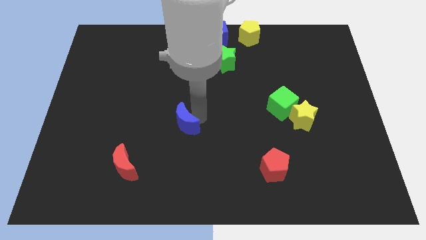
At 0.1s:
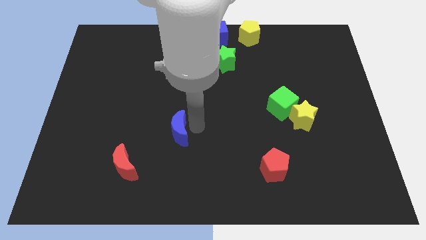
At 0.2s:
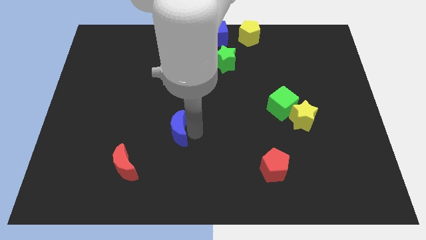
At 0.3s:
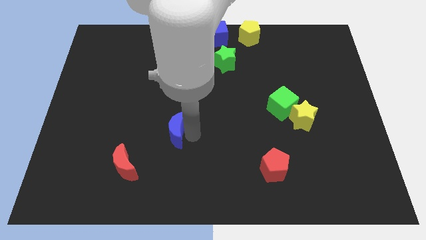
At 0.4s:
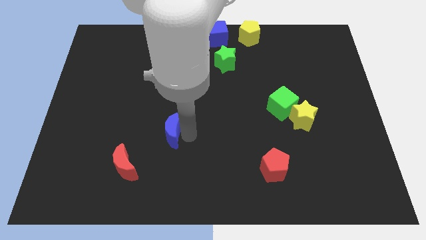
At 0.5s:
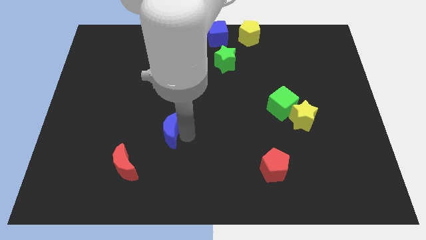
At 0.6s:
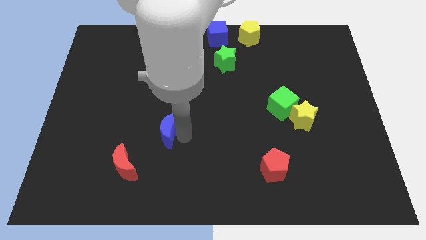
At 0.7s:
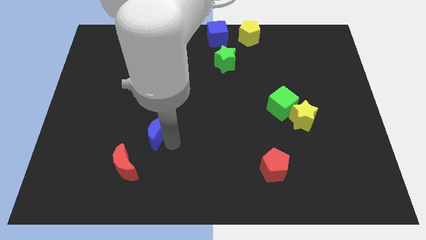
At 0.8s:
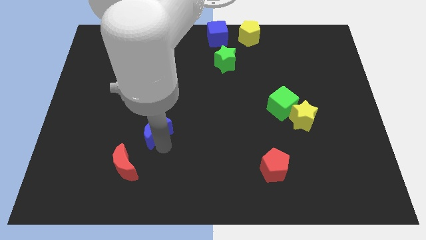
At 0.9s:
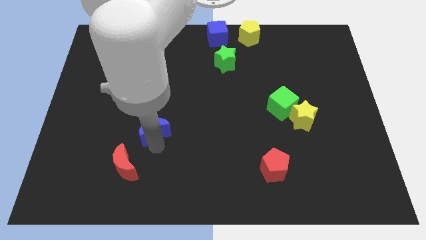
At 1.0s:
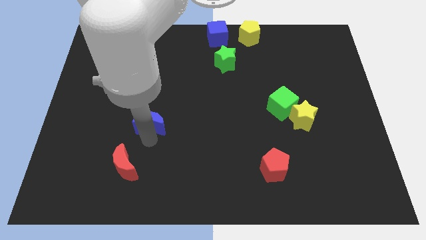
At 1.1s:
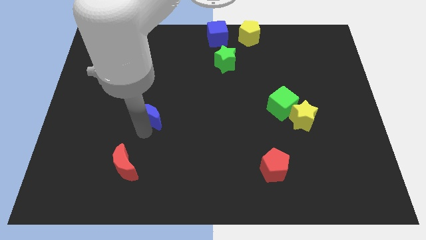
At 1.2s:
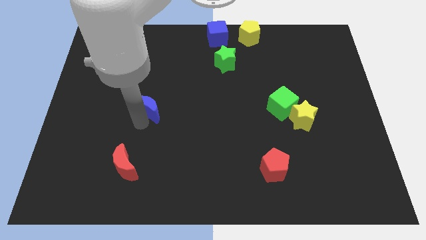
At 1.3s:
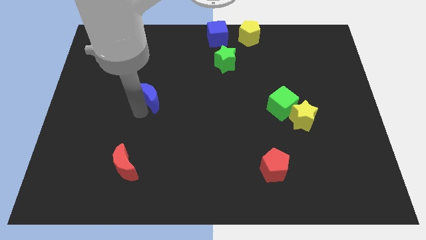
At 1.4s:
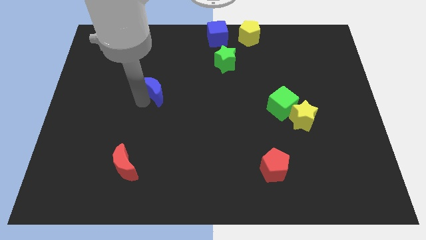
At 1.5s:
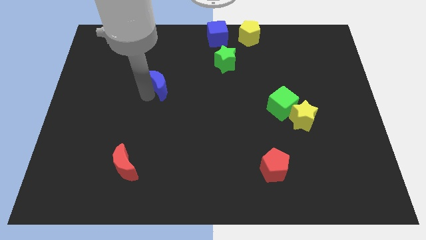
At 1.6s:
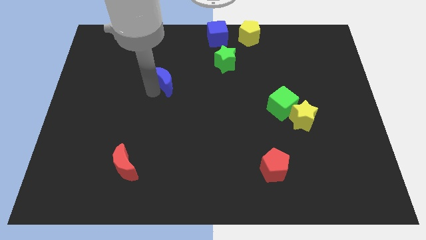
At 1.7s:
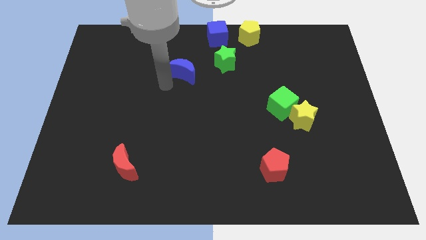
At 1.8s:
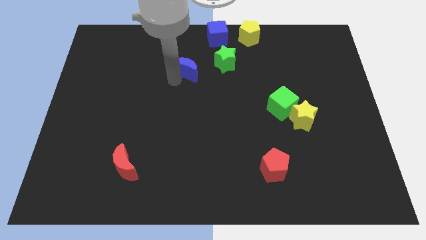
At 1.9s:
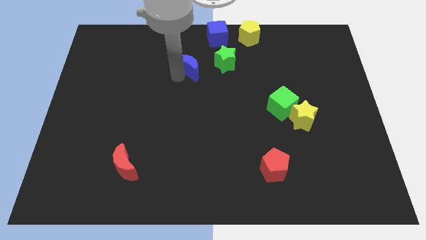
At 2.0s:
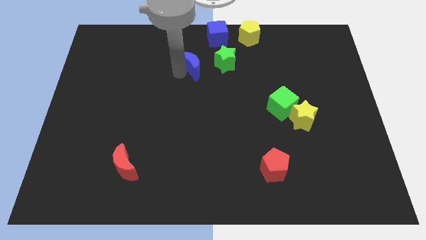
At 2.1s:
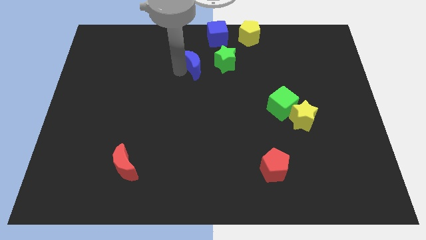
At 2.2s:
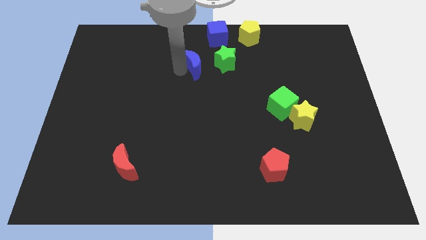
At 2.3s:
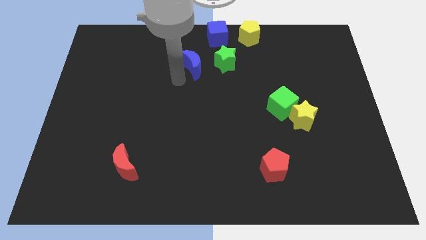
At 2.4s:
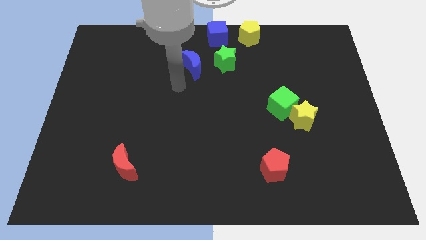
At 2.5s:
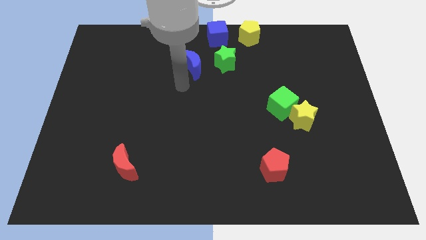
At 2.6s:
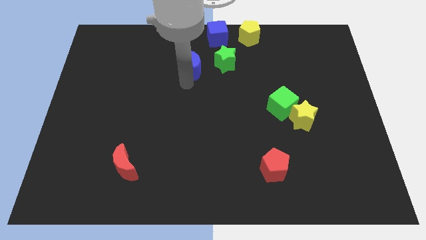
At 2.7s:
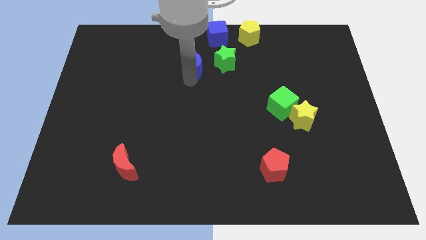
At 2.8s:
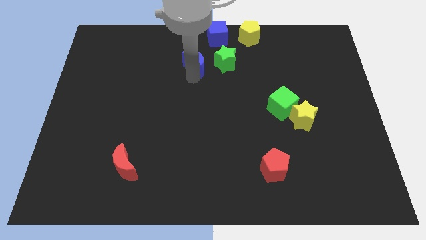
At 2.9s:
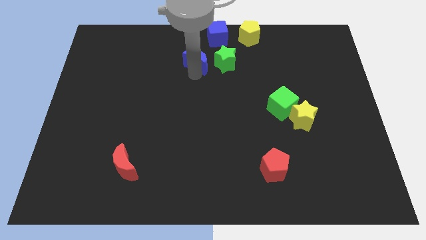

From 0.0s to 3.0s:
push the blue moon to the left side of the green star

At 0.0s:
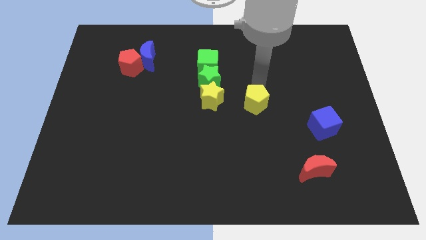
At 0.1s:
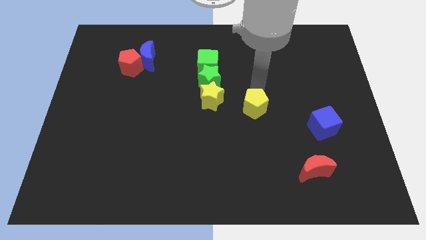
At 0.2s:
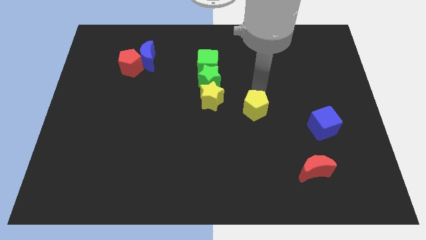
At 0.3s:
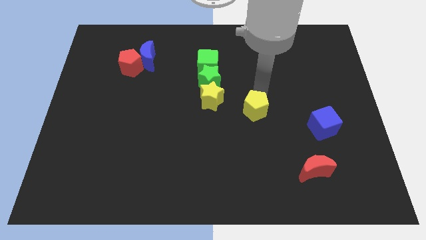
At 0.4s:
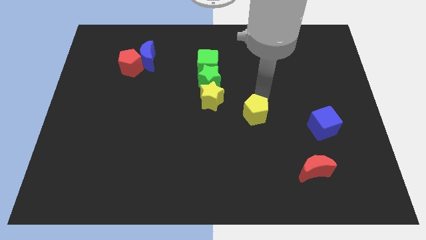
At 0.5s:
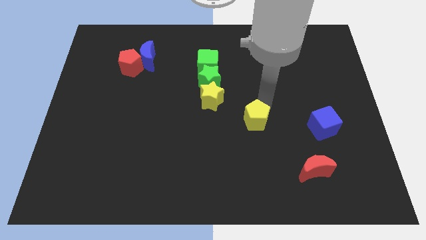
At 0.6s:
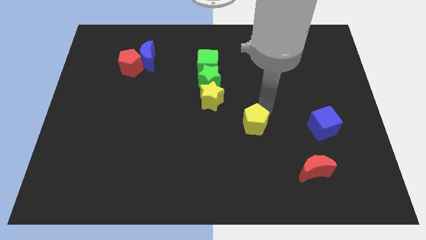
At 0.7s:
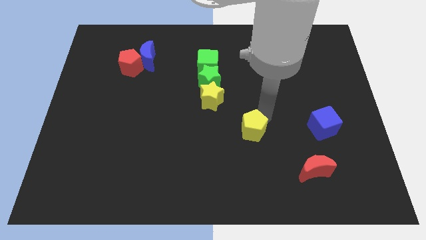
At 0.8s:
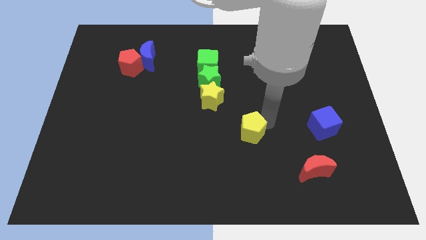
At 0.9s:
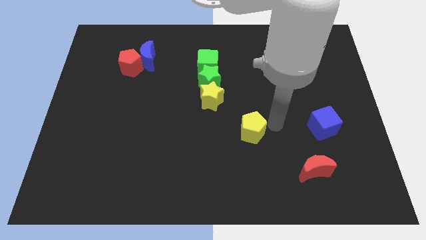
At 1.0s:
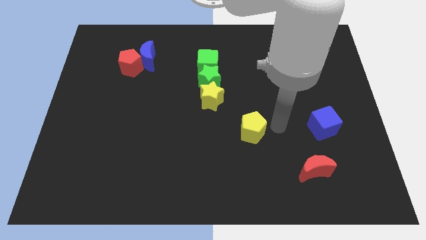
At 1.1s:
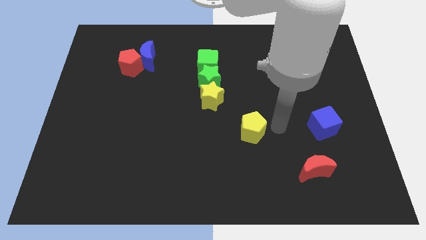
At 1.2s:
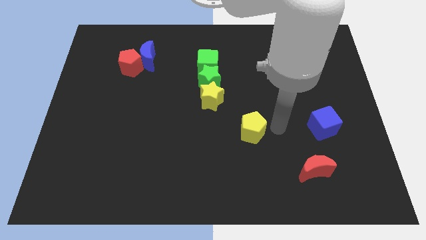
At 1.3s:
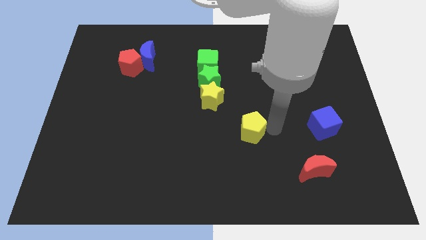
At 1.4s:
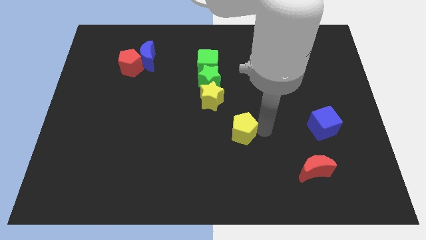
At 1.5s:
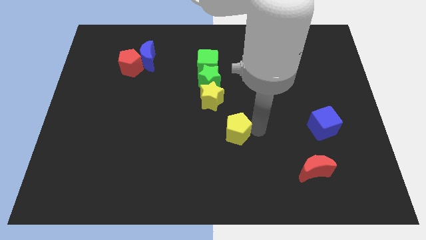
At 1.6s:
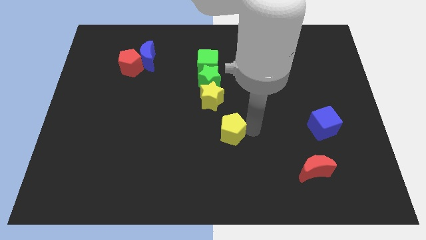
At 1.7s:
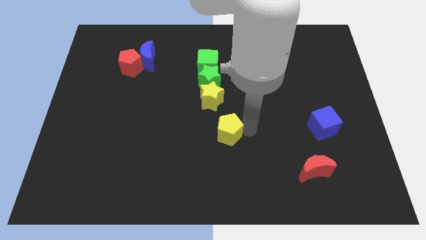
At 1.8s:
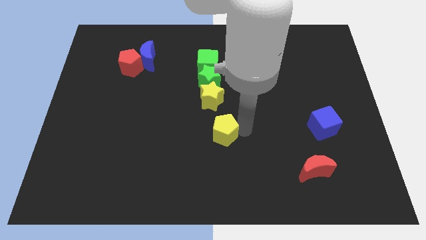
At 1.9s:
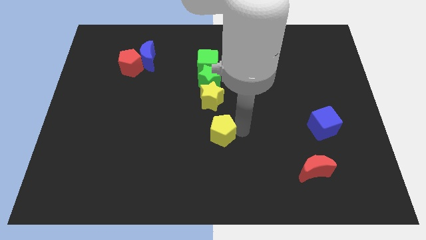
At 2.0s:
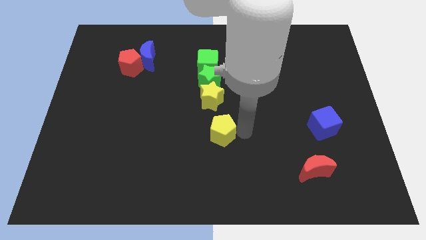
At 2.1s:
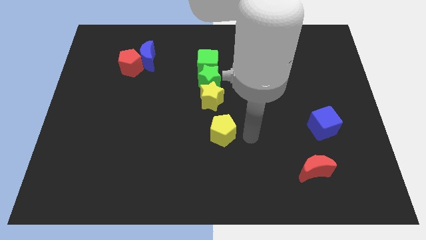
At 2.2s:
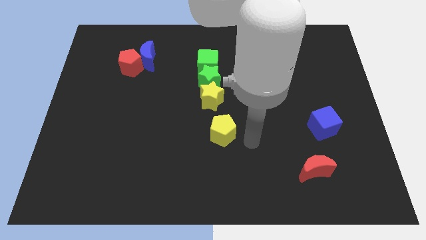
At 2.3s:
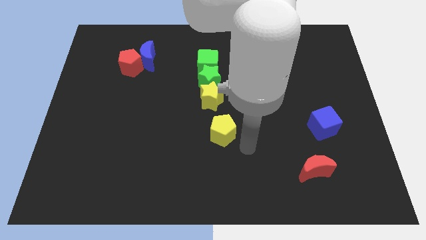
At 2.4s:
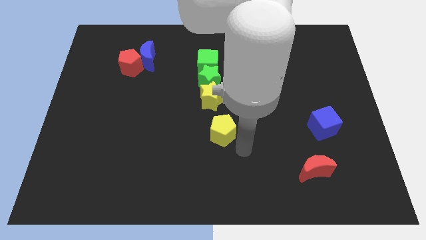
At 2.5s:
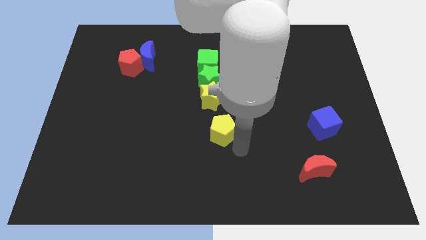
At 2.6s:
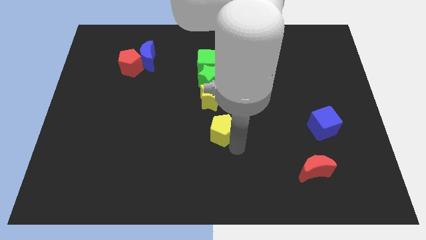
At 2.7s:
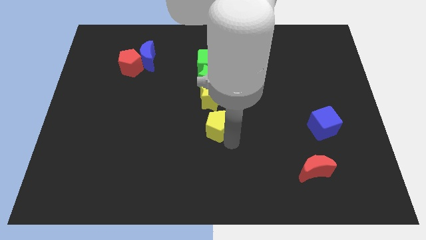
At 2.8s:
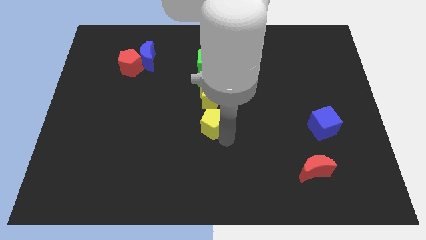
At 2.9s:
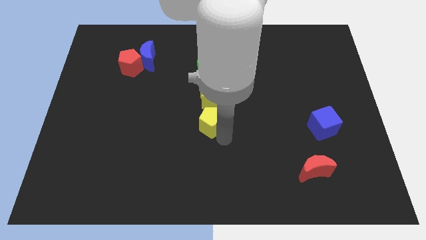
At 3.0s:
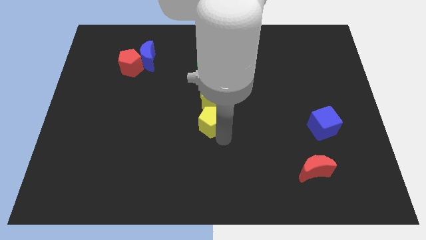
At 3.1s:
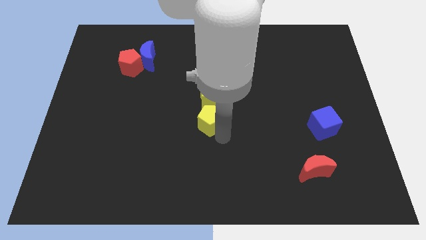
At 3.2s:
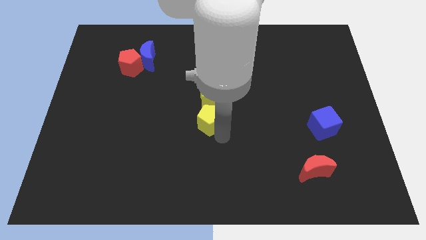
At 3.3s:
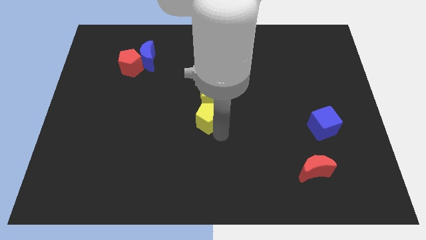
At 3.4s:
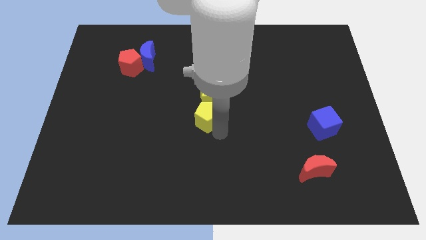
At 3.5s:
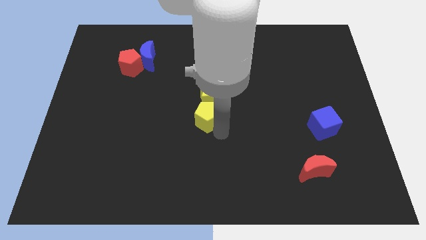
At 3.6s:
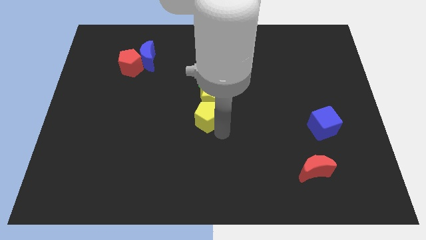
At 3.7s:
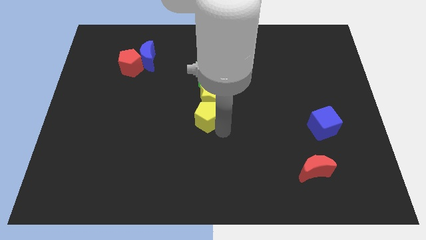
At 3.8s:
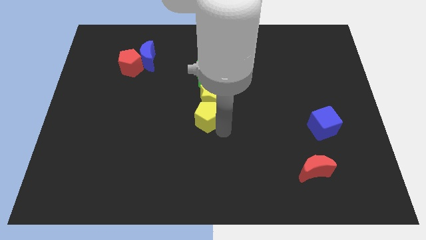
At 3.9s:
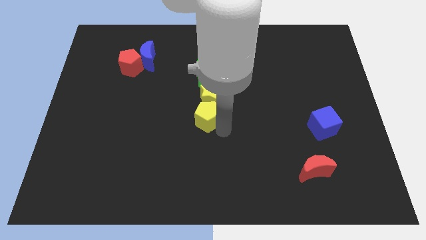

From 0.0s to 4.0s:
place the yellow pentagon below the yellow star

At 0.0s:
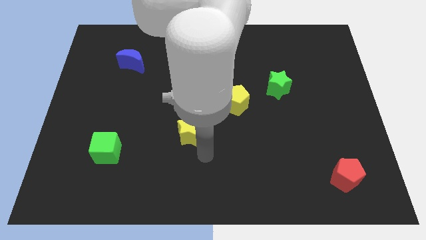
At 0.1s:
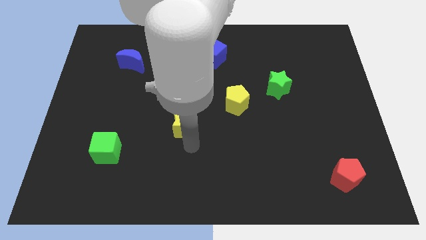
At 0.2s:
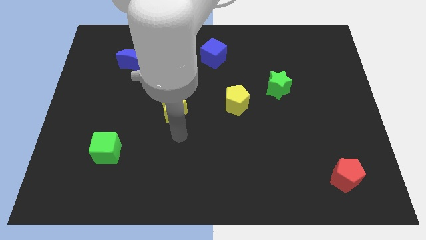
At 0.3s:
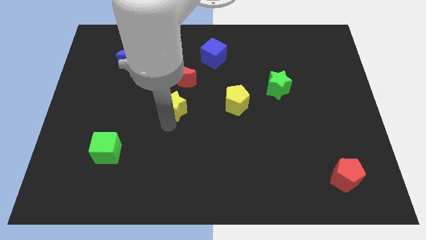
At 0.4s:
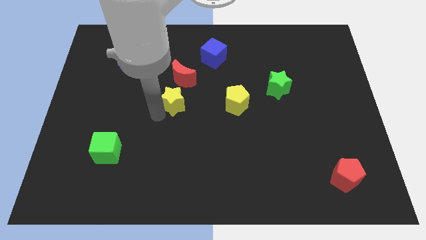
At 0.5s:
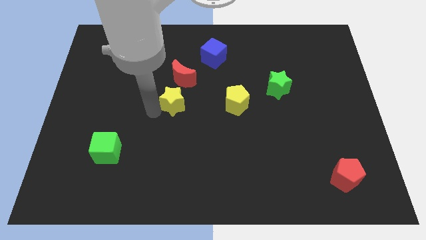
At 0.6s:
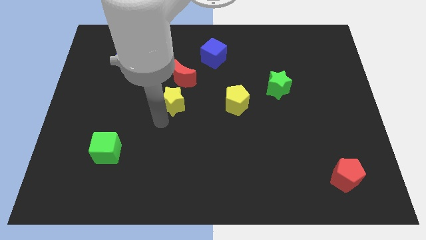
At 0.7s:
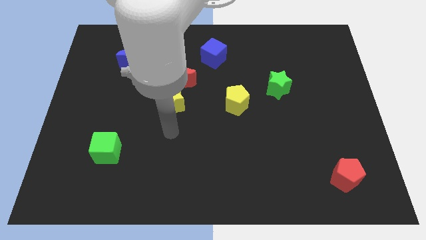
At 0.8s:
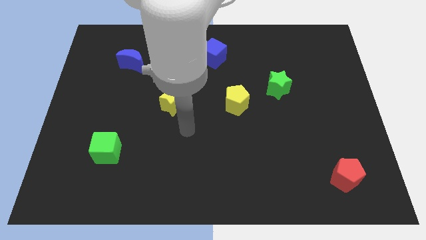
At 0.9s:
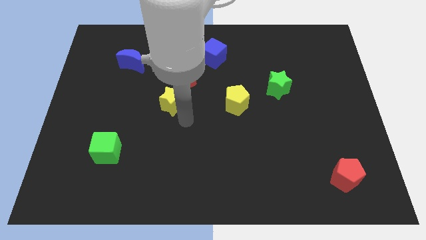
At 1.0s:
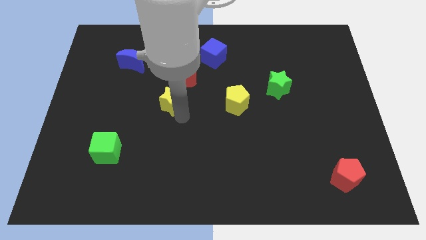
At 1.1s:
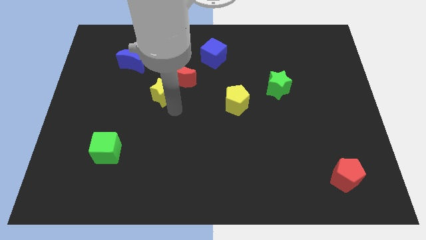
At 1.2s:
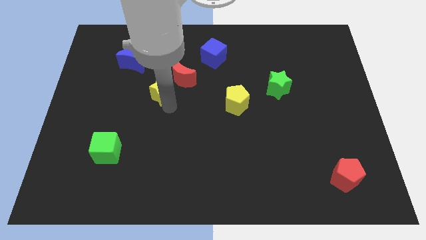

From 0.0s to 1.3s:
place the yellow star diagonally to the bottom left of the red crescent

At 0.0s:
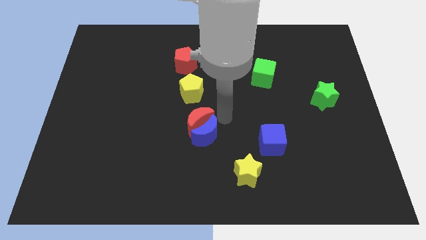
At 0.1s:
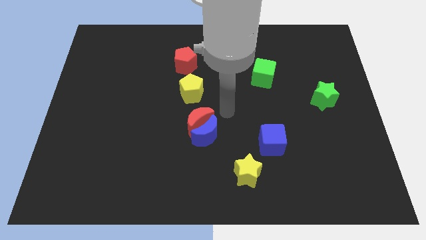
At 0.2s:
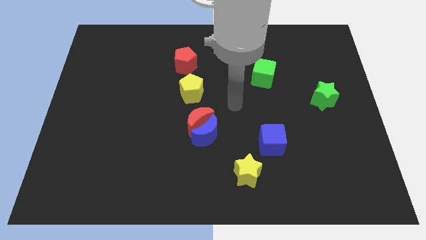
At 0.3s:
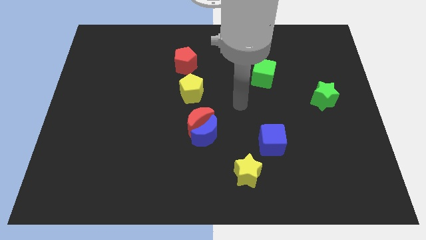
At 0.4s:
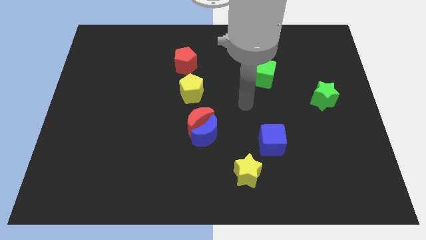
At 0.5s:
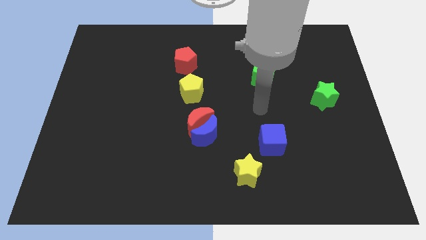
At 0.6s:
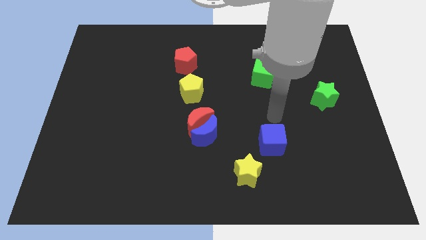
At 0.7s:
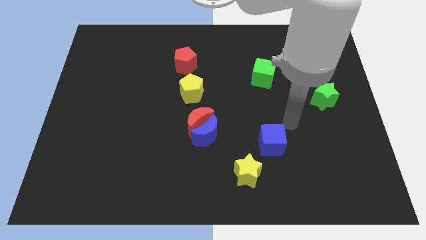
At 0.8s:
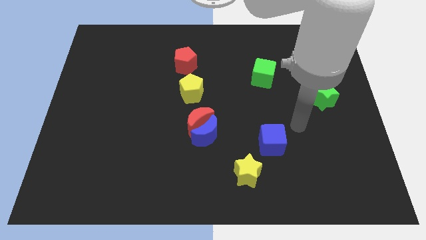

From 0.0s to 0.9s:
go away from the blue moon
